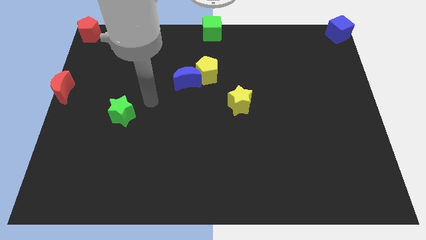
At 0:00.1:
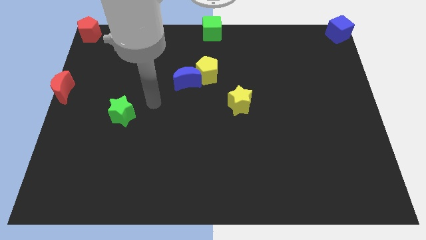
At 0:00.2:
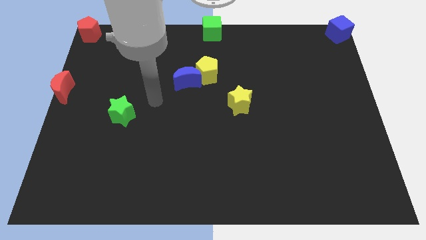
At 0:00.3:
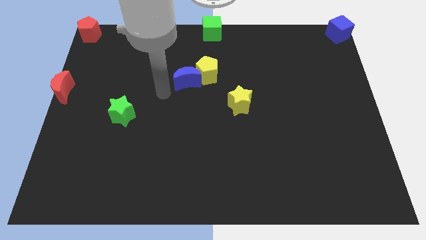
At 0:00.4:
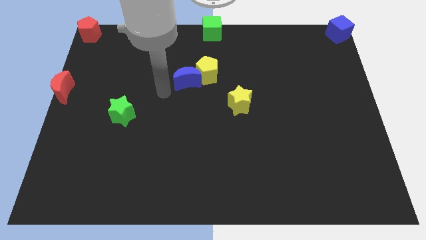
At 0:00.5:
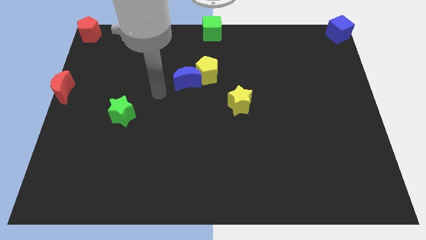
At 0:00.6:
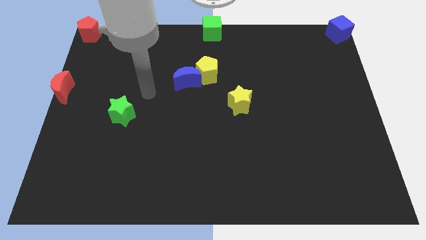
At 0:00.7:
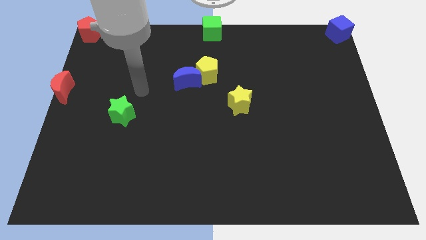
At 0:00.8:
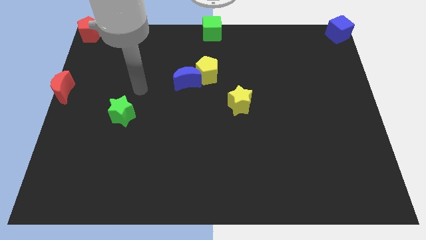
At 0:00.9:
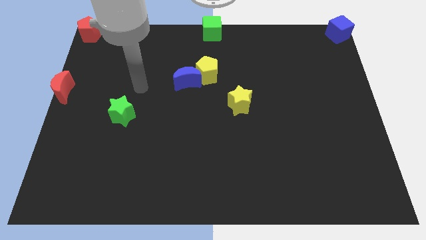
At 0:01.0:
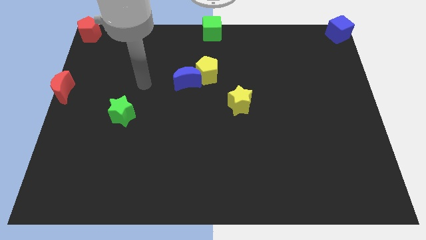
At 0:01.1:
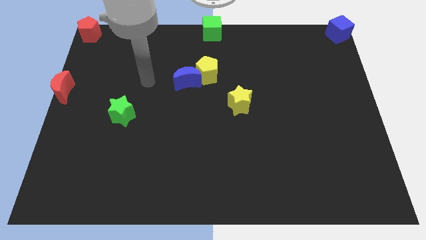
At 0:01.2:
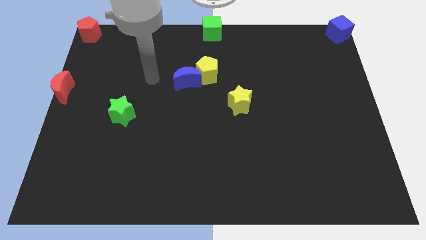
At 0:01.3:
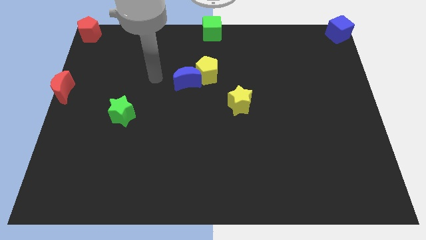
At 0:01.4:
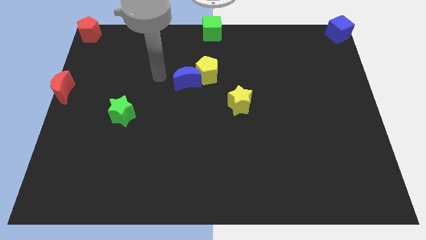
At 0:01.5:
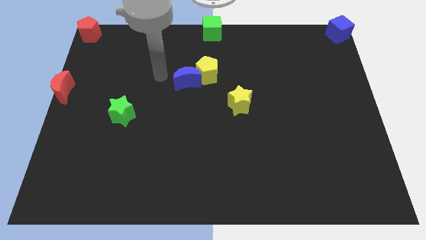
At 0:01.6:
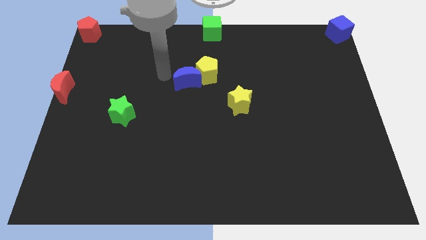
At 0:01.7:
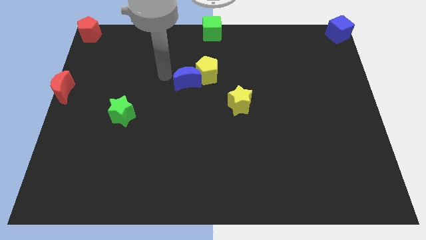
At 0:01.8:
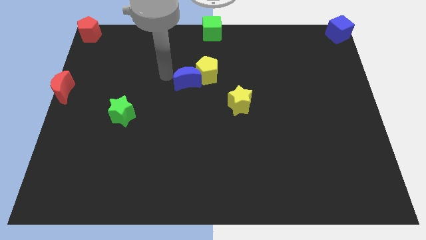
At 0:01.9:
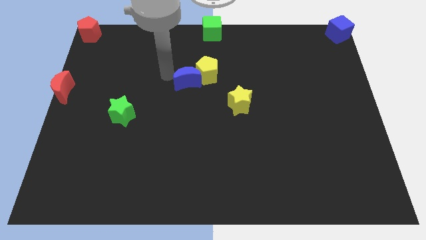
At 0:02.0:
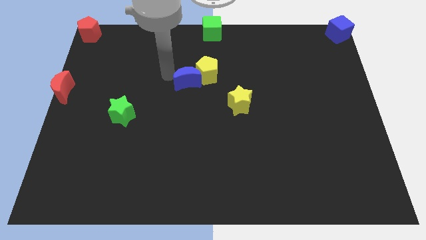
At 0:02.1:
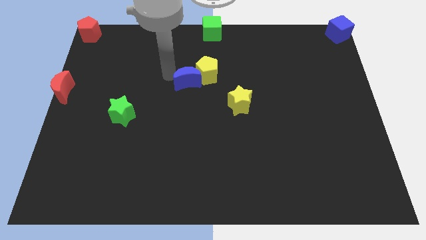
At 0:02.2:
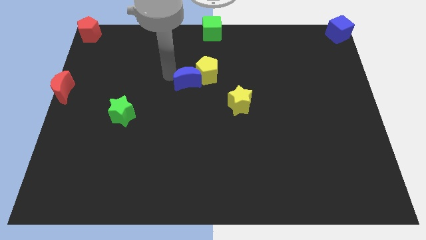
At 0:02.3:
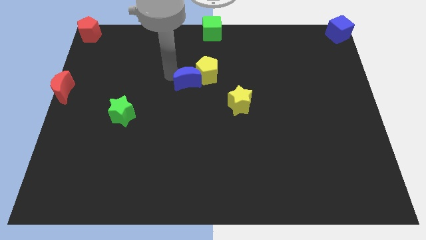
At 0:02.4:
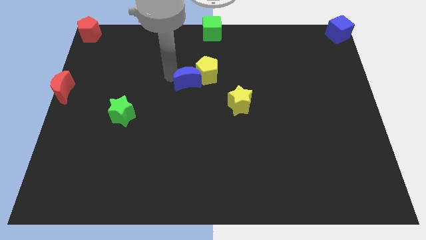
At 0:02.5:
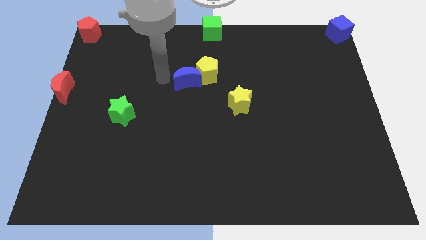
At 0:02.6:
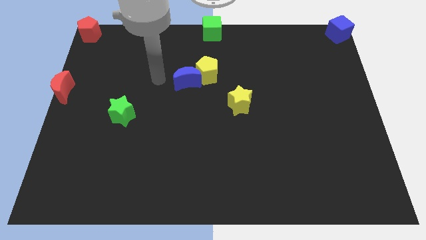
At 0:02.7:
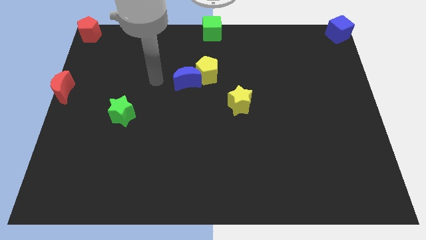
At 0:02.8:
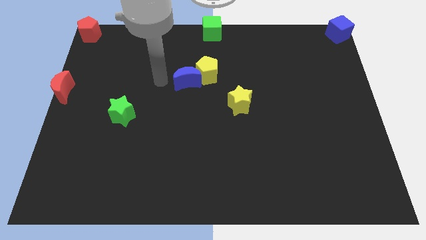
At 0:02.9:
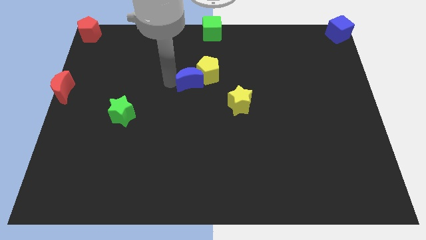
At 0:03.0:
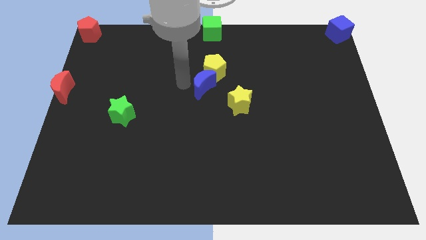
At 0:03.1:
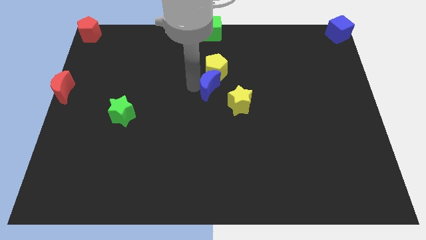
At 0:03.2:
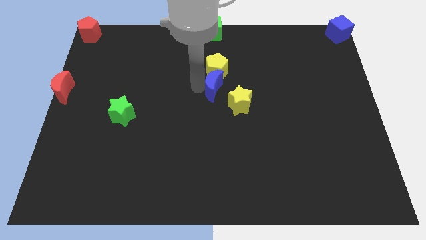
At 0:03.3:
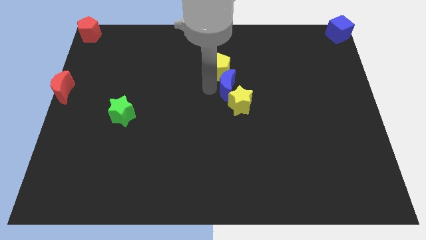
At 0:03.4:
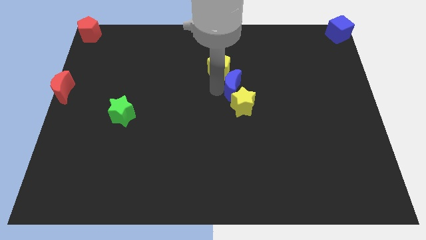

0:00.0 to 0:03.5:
place the blue crescent in between the yellow blocks

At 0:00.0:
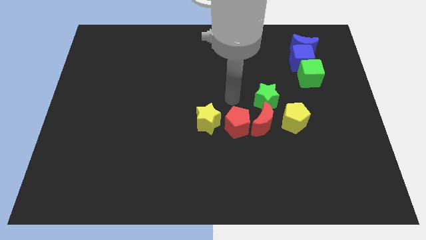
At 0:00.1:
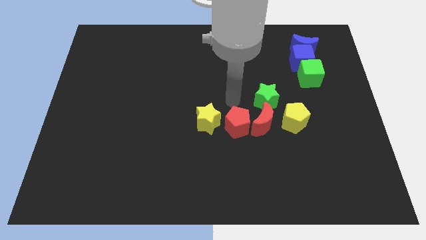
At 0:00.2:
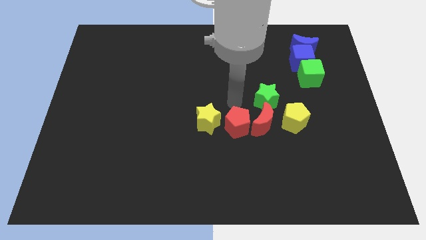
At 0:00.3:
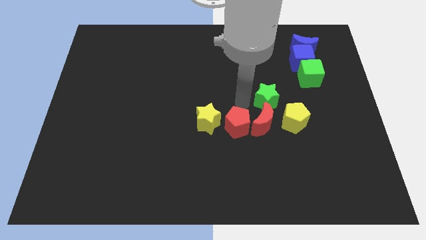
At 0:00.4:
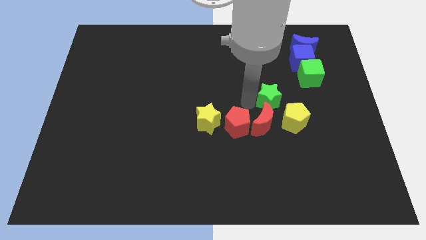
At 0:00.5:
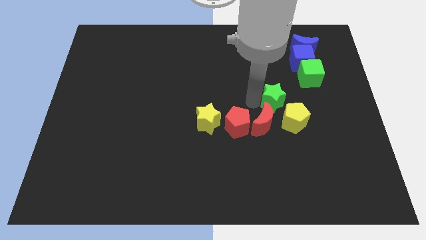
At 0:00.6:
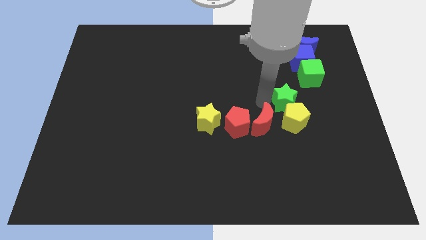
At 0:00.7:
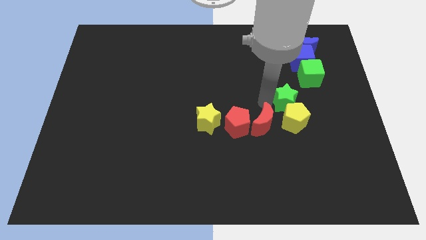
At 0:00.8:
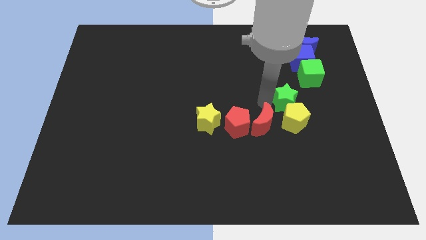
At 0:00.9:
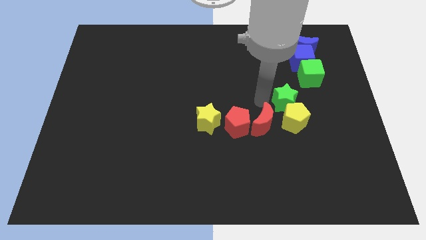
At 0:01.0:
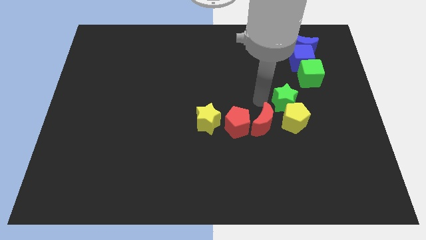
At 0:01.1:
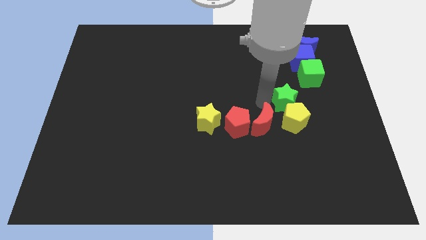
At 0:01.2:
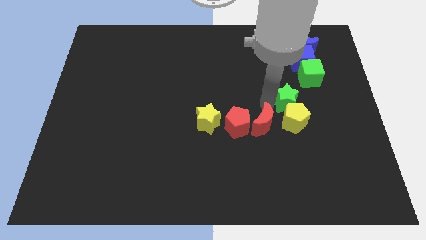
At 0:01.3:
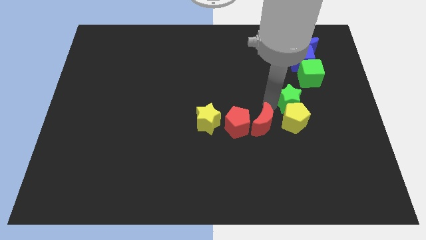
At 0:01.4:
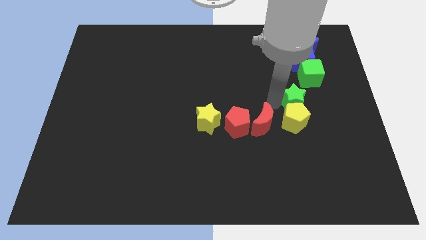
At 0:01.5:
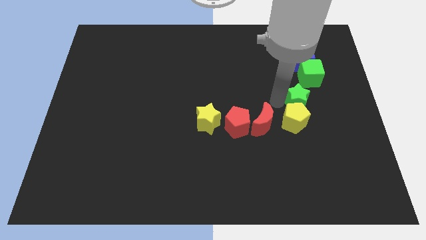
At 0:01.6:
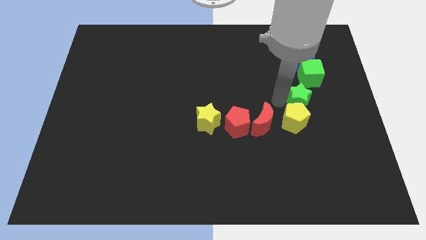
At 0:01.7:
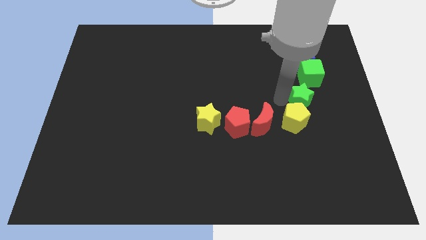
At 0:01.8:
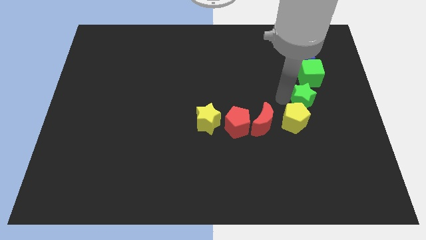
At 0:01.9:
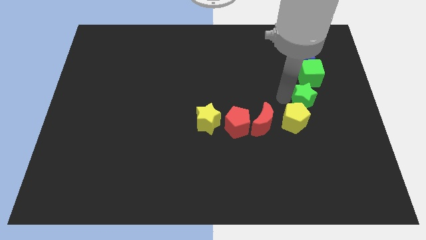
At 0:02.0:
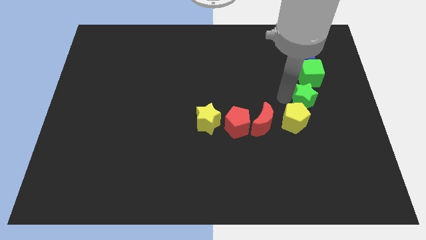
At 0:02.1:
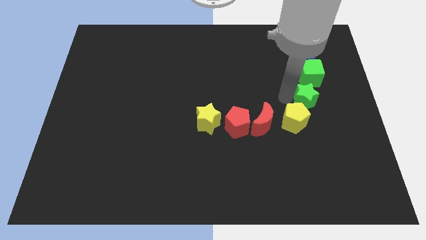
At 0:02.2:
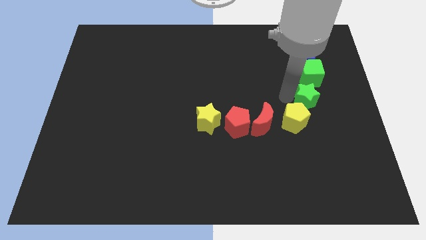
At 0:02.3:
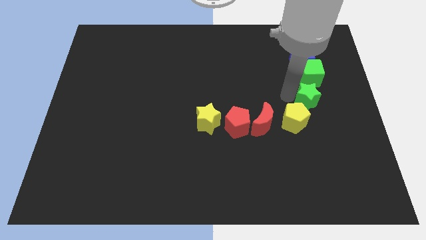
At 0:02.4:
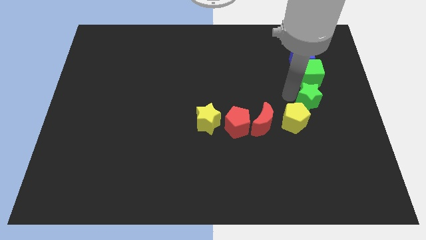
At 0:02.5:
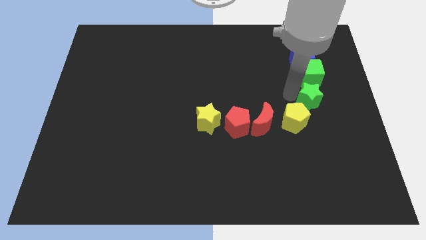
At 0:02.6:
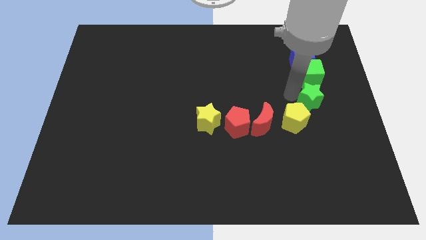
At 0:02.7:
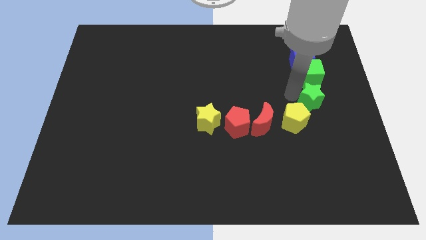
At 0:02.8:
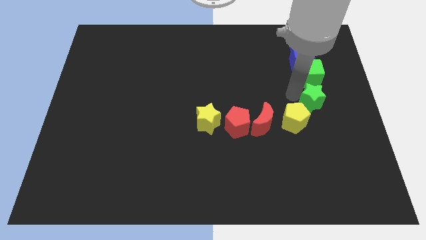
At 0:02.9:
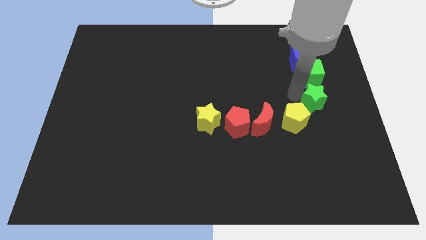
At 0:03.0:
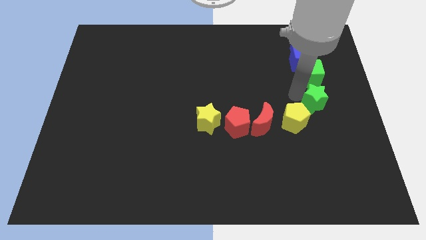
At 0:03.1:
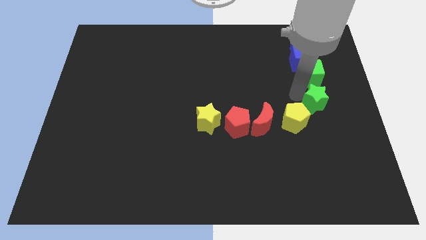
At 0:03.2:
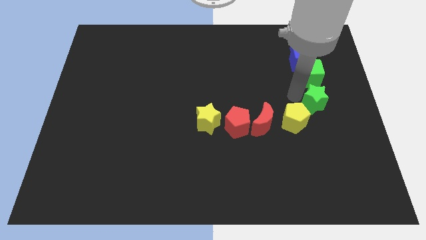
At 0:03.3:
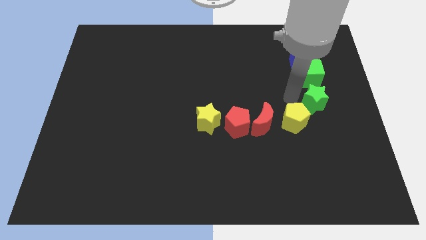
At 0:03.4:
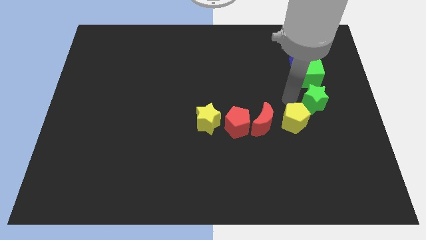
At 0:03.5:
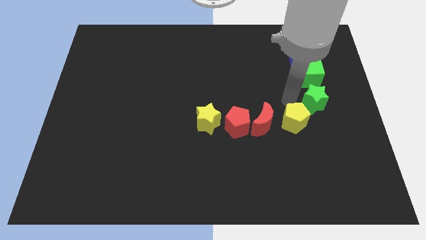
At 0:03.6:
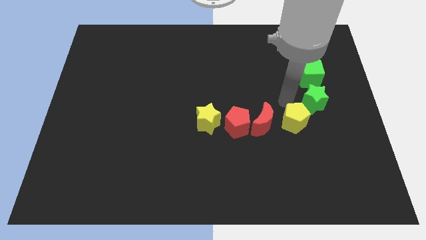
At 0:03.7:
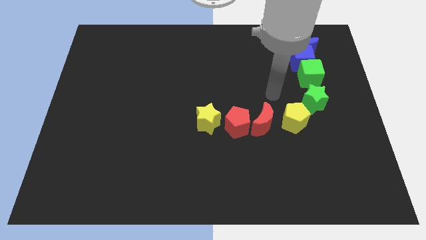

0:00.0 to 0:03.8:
place green star below green cube

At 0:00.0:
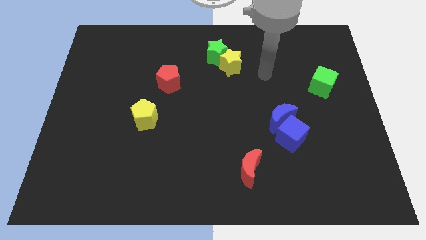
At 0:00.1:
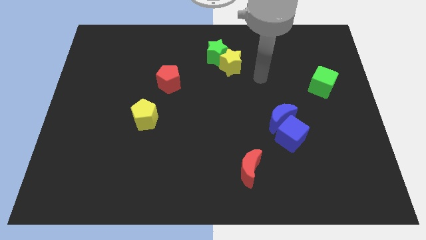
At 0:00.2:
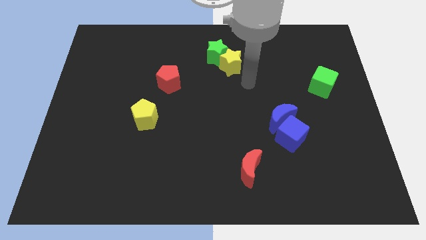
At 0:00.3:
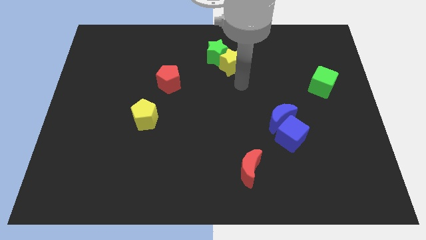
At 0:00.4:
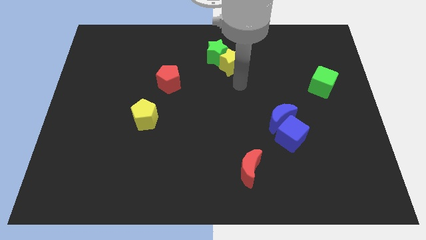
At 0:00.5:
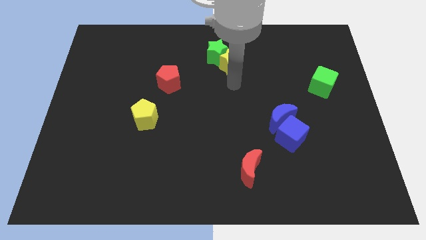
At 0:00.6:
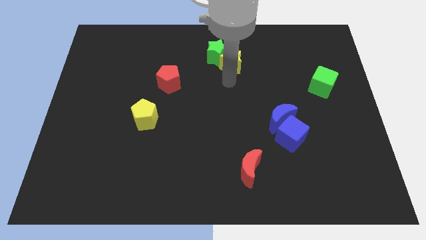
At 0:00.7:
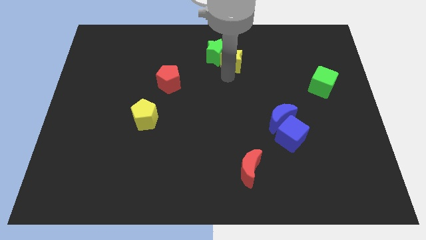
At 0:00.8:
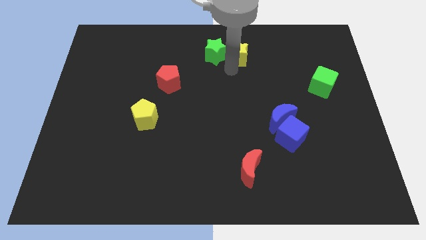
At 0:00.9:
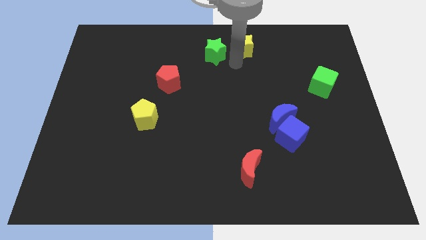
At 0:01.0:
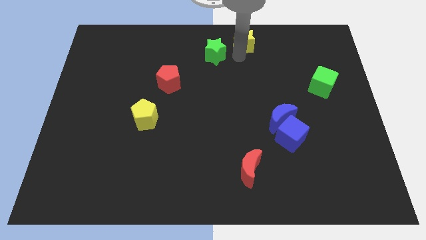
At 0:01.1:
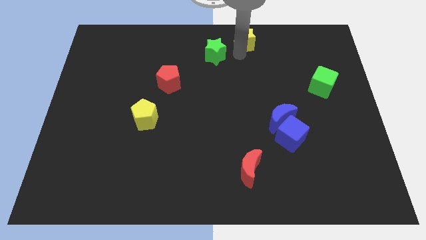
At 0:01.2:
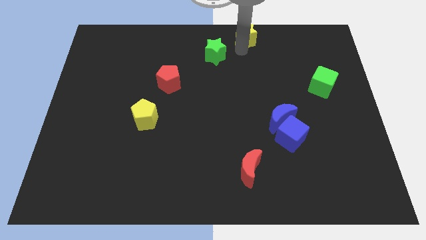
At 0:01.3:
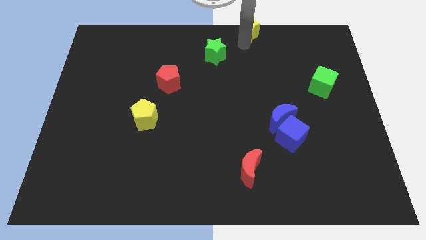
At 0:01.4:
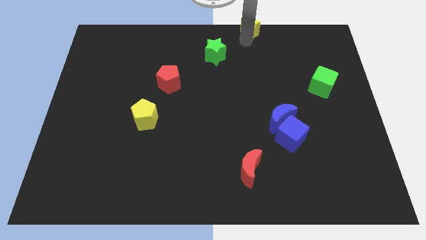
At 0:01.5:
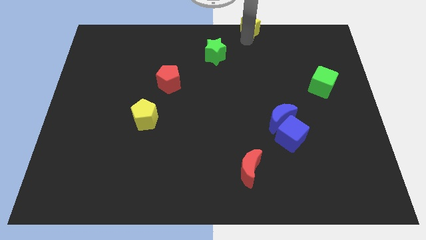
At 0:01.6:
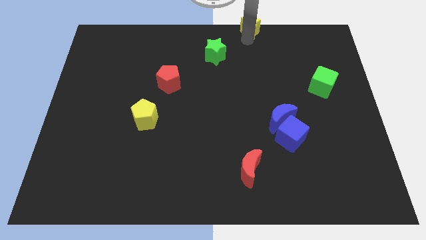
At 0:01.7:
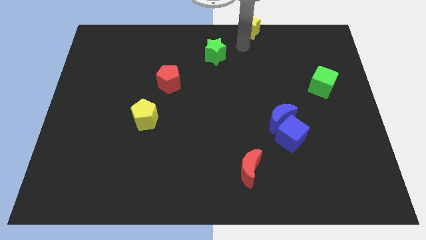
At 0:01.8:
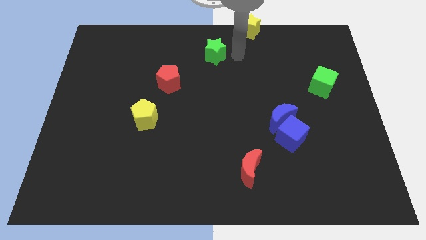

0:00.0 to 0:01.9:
push the yellow star diagonal right of green star
